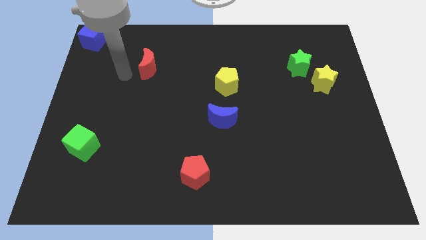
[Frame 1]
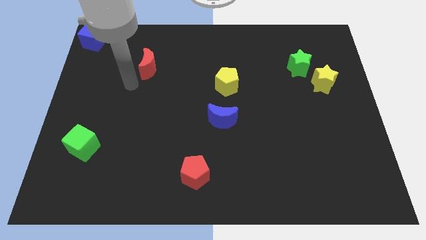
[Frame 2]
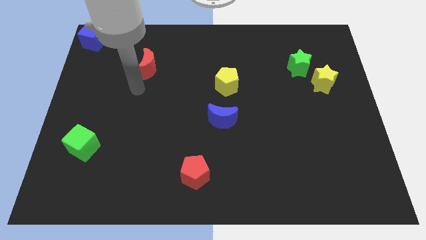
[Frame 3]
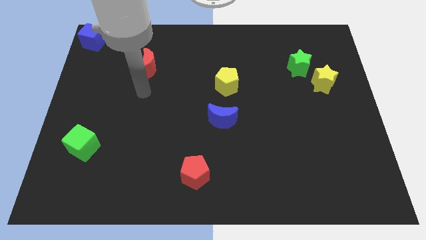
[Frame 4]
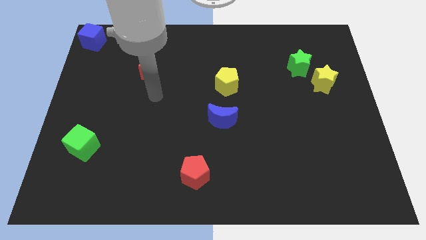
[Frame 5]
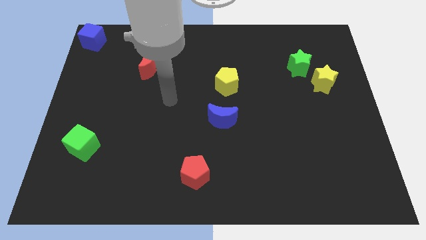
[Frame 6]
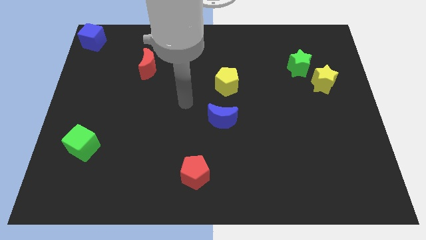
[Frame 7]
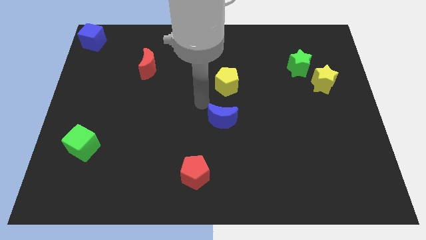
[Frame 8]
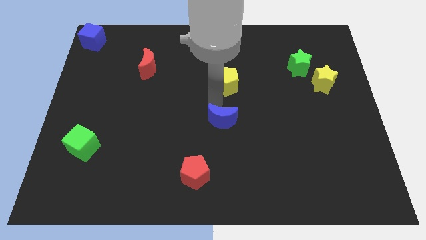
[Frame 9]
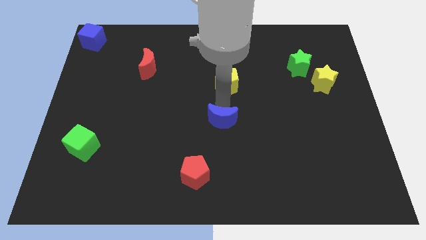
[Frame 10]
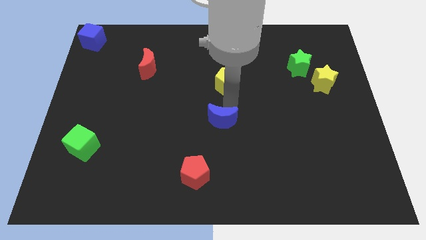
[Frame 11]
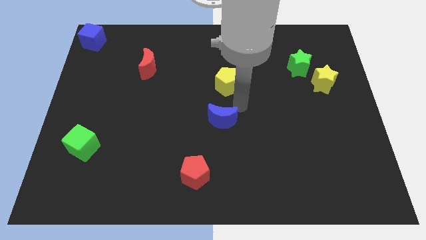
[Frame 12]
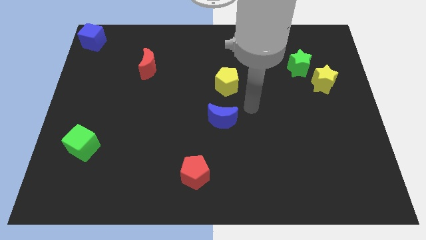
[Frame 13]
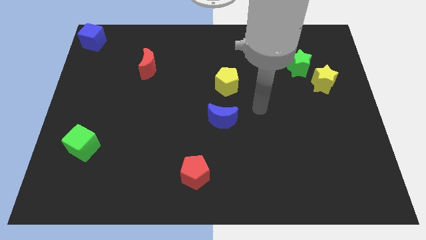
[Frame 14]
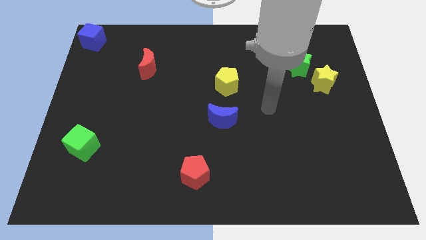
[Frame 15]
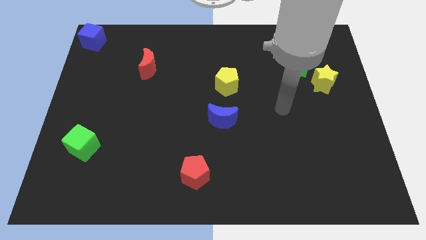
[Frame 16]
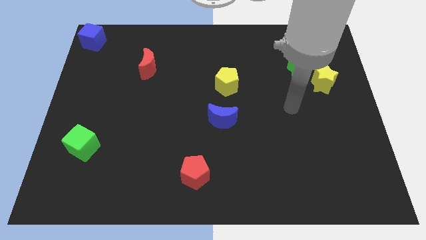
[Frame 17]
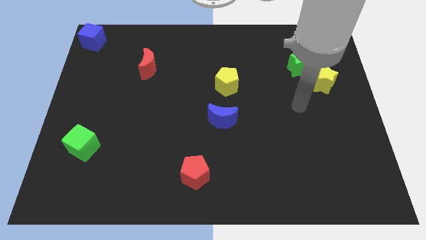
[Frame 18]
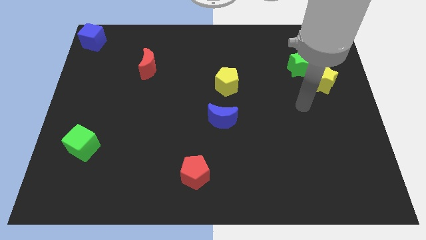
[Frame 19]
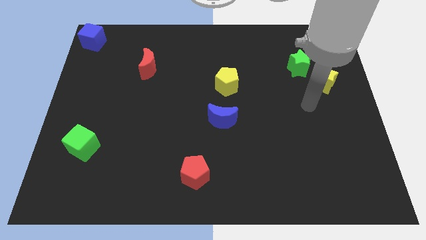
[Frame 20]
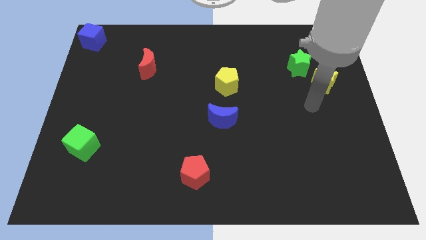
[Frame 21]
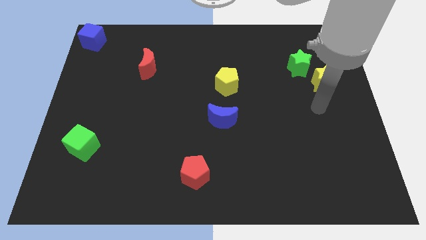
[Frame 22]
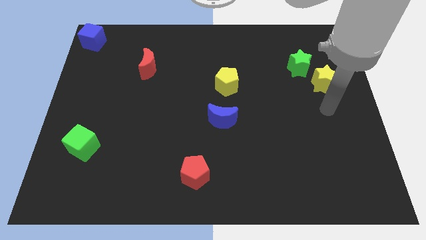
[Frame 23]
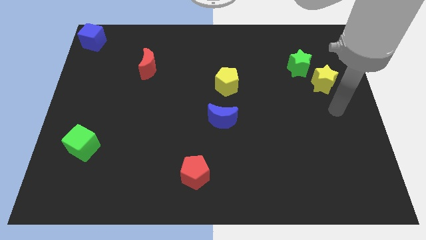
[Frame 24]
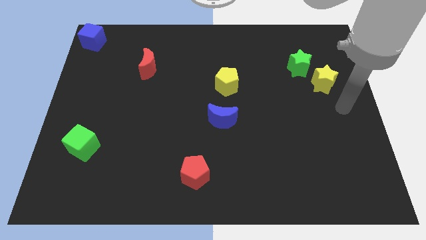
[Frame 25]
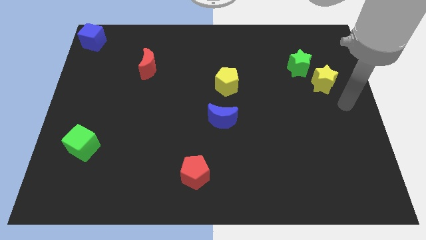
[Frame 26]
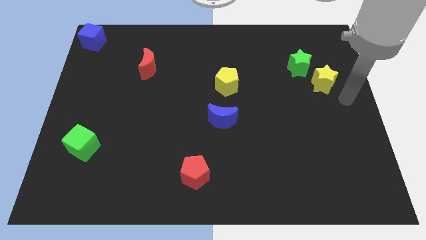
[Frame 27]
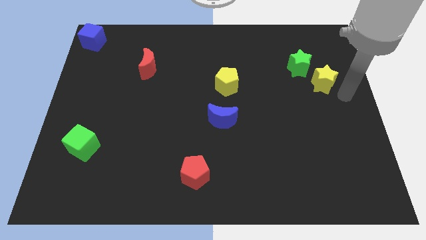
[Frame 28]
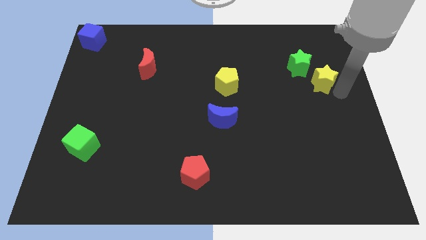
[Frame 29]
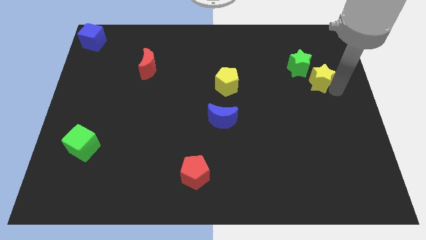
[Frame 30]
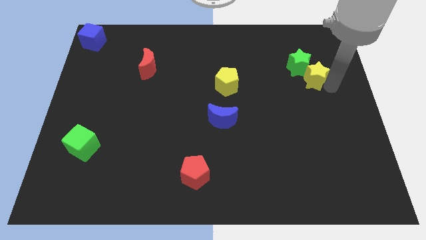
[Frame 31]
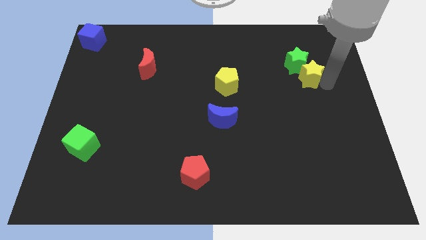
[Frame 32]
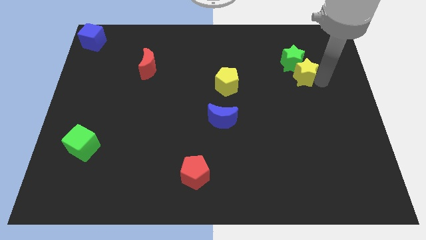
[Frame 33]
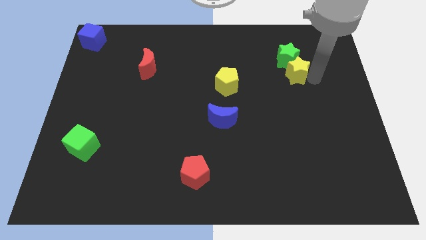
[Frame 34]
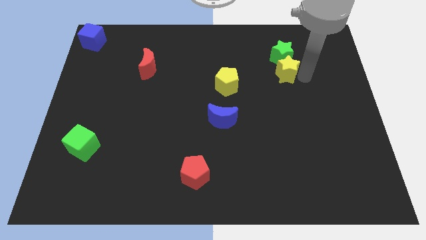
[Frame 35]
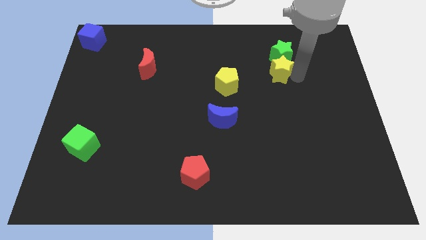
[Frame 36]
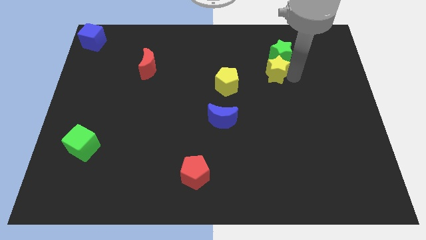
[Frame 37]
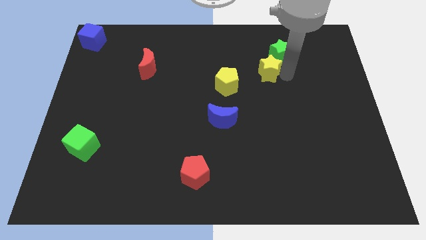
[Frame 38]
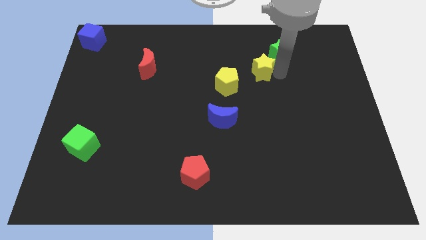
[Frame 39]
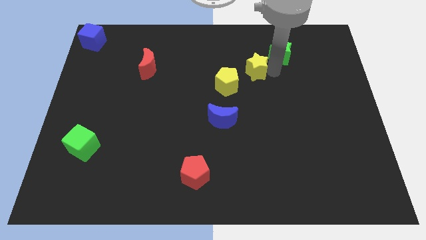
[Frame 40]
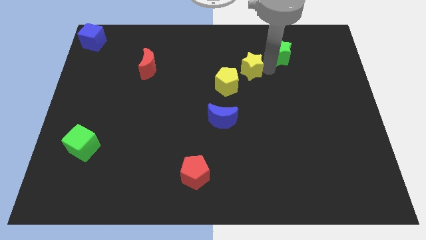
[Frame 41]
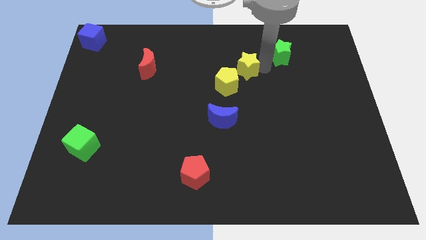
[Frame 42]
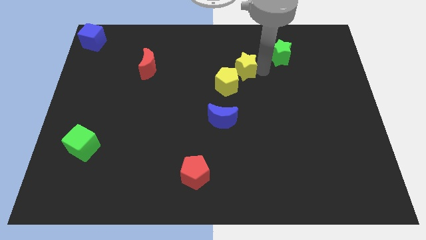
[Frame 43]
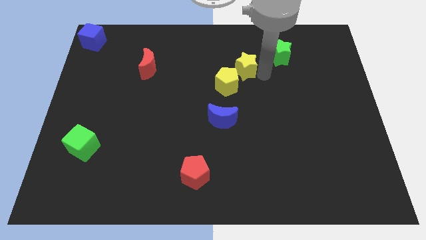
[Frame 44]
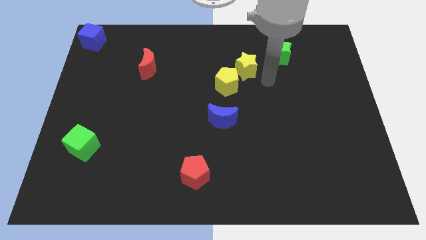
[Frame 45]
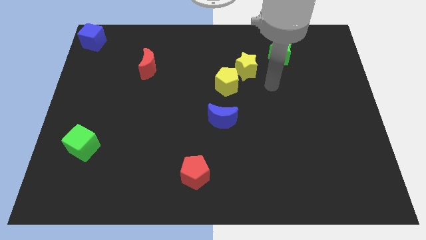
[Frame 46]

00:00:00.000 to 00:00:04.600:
push both the stars to the middle

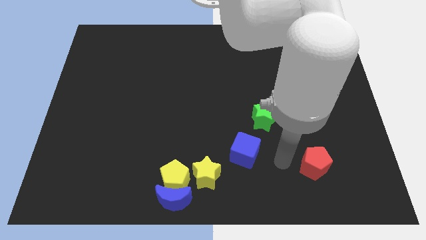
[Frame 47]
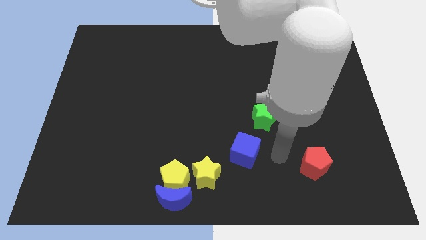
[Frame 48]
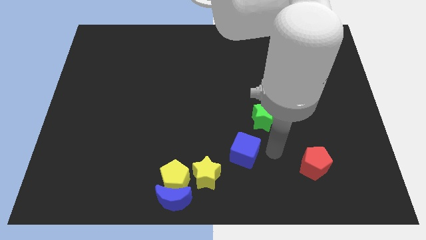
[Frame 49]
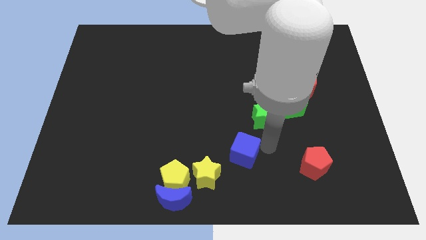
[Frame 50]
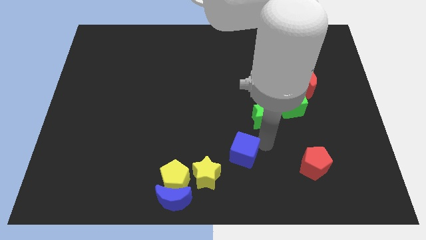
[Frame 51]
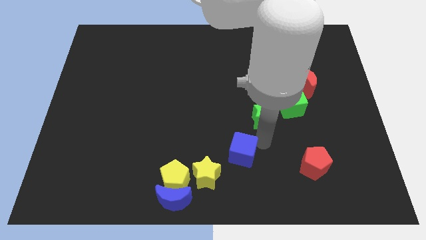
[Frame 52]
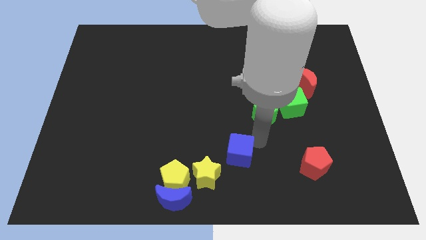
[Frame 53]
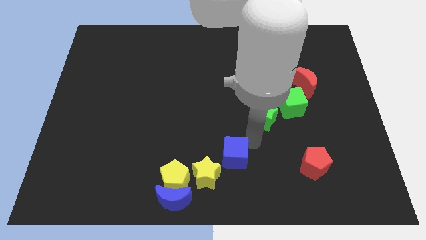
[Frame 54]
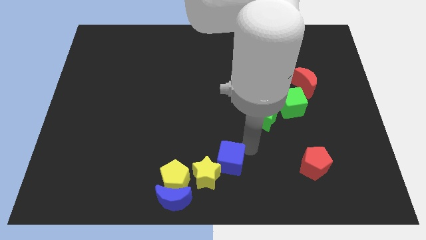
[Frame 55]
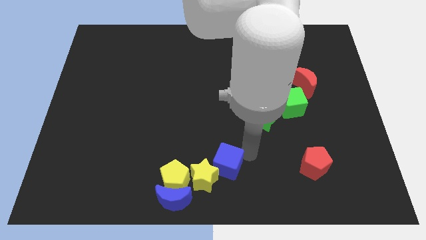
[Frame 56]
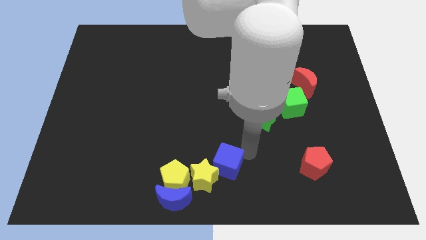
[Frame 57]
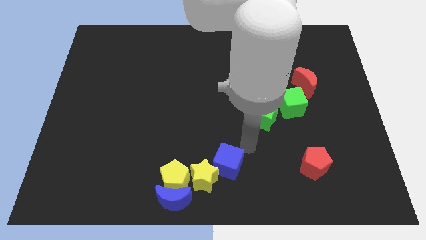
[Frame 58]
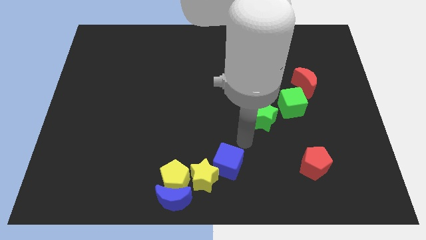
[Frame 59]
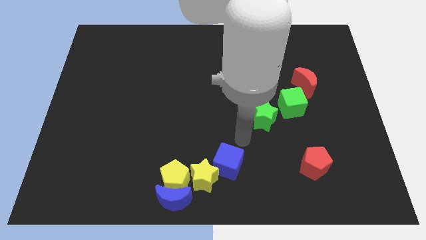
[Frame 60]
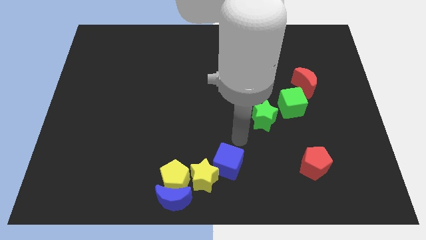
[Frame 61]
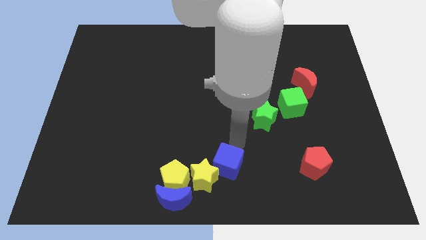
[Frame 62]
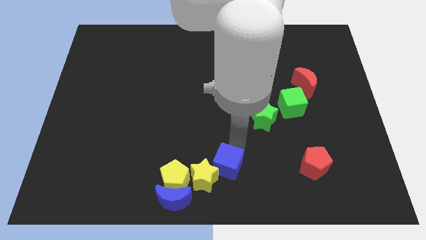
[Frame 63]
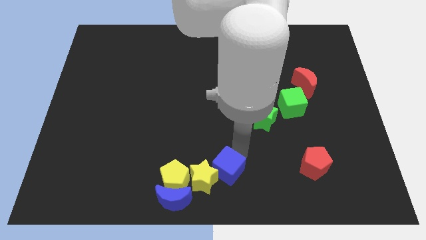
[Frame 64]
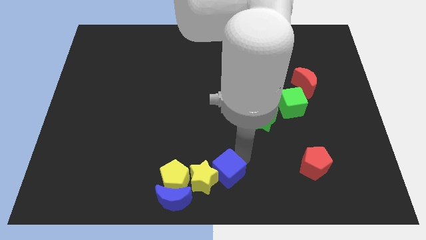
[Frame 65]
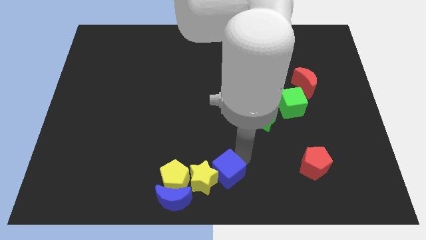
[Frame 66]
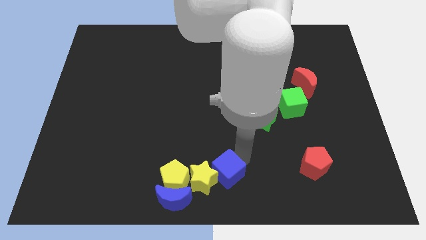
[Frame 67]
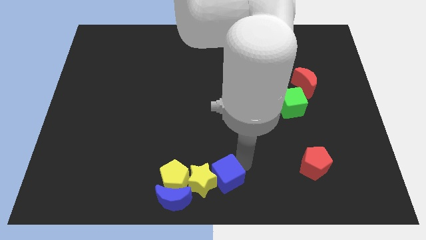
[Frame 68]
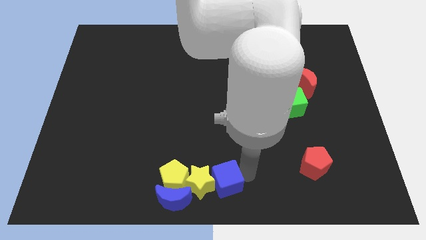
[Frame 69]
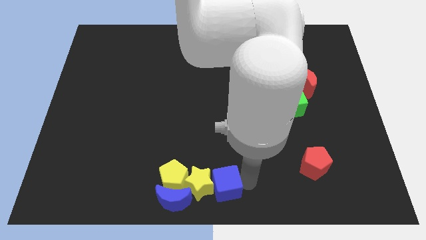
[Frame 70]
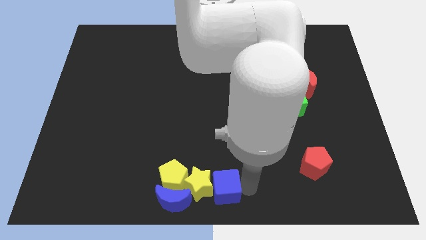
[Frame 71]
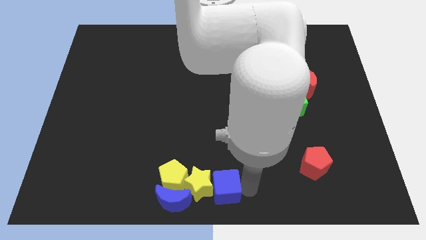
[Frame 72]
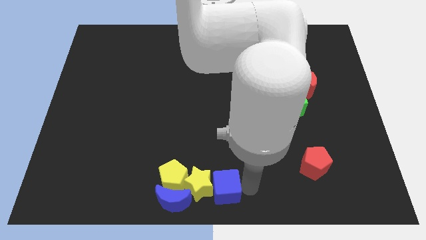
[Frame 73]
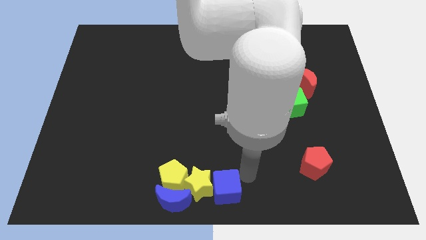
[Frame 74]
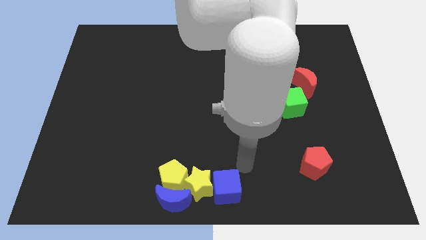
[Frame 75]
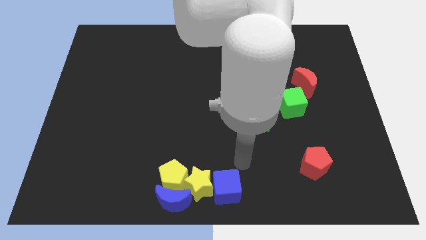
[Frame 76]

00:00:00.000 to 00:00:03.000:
move blue cube to the right of the yellow star

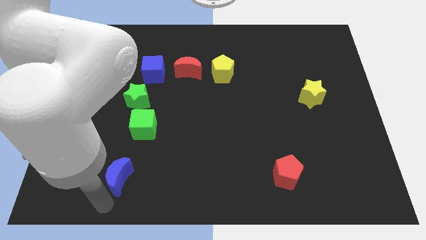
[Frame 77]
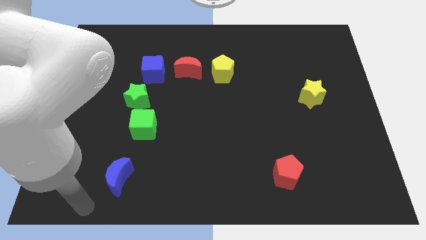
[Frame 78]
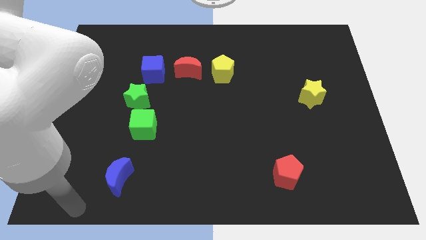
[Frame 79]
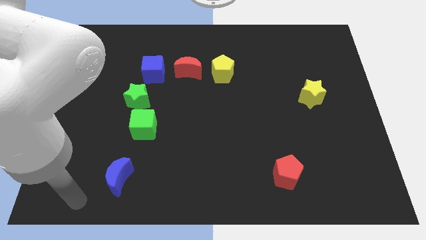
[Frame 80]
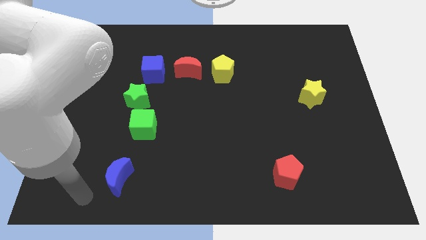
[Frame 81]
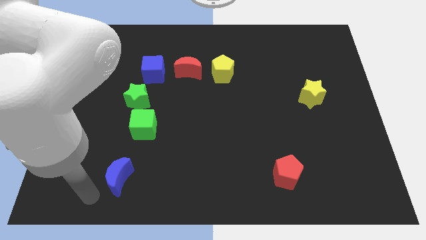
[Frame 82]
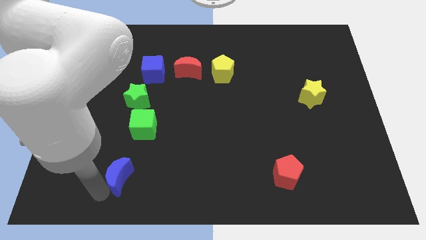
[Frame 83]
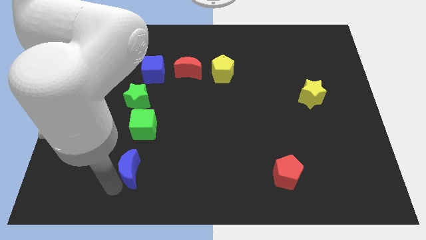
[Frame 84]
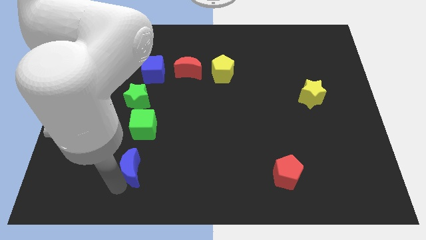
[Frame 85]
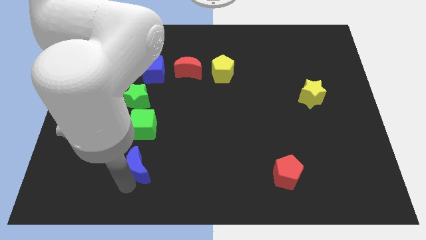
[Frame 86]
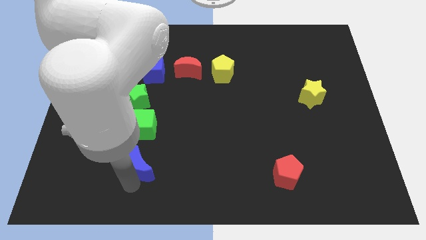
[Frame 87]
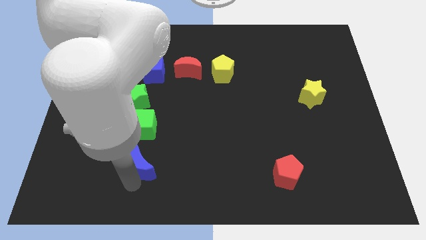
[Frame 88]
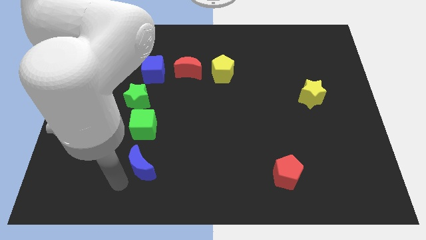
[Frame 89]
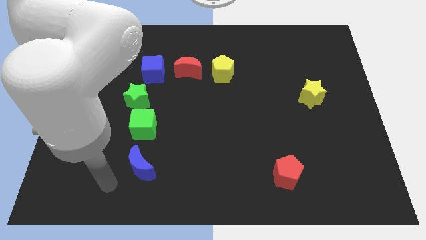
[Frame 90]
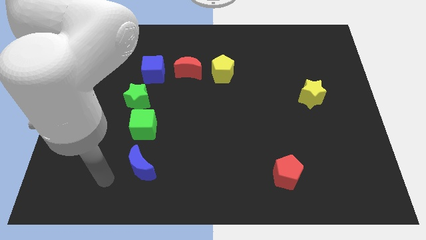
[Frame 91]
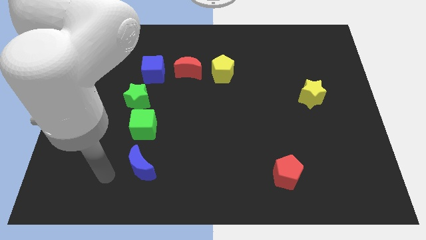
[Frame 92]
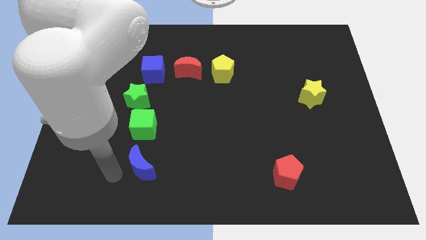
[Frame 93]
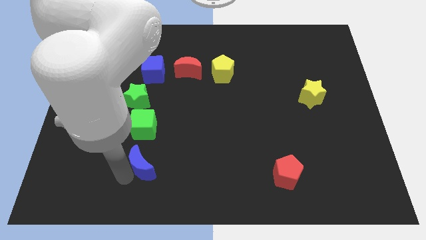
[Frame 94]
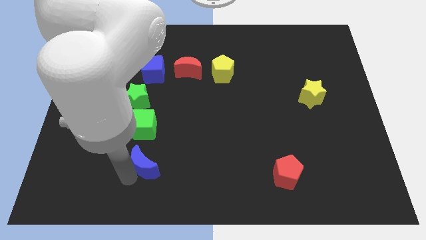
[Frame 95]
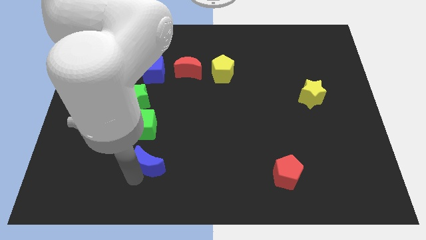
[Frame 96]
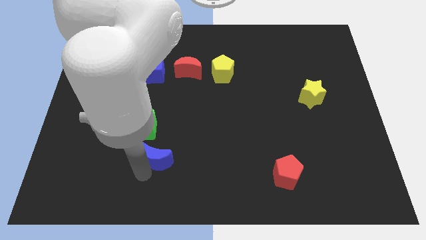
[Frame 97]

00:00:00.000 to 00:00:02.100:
push blue moon towards green cube
